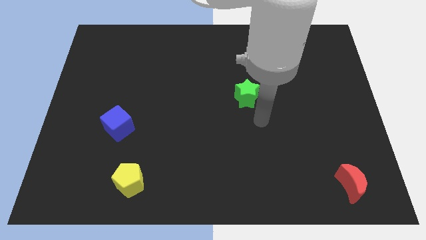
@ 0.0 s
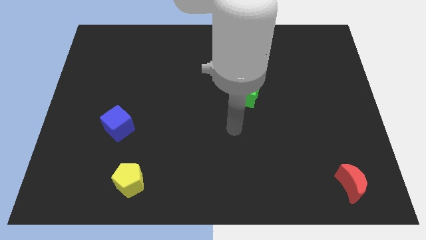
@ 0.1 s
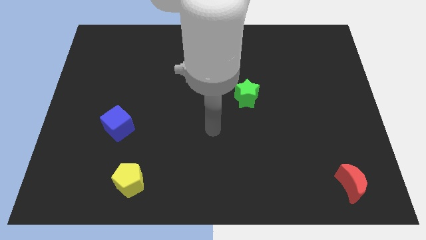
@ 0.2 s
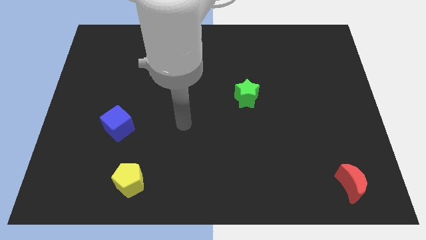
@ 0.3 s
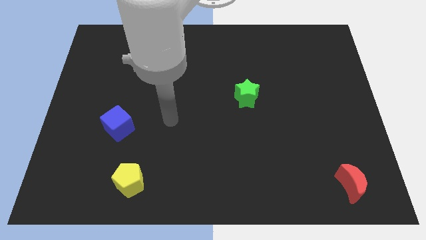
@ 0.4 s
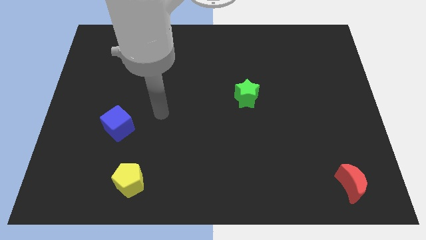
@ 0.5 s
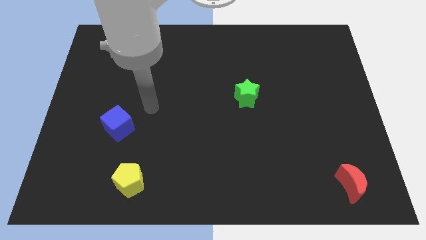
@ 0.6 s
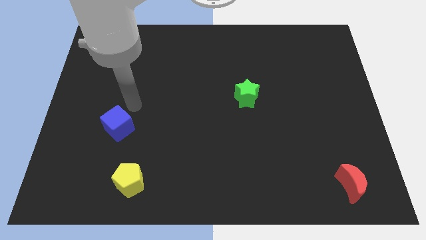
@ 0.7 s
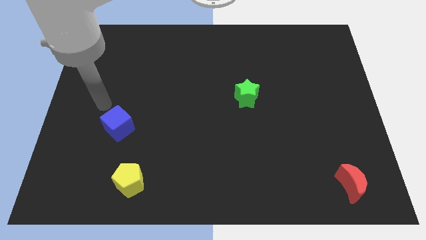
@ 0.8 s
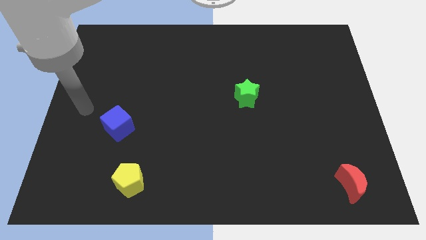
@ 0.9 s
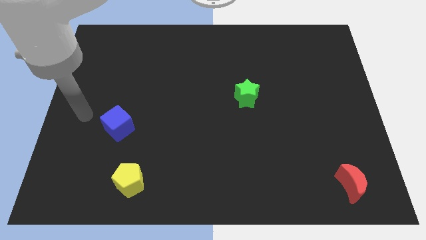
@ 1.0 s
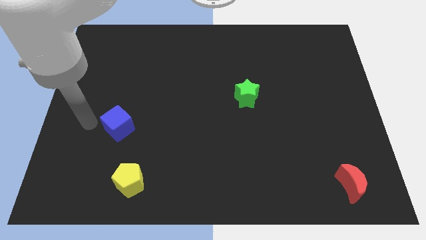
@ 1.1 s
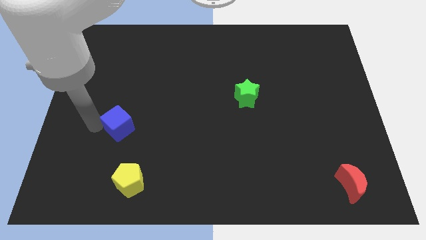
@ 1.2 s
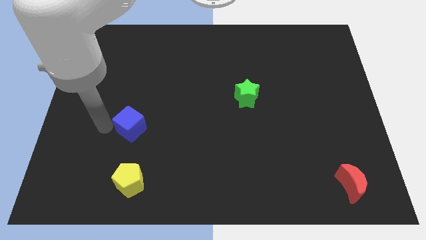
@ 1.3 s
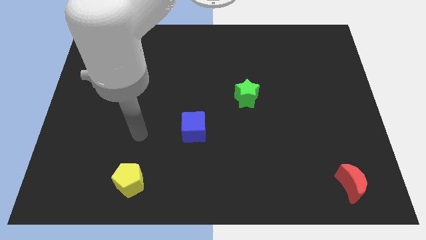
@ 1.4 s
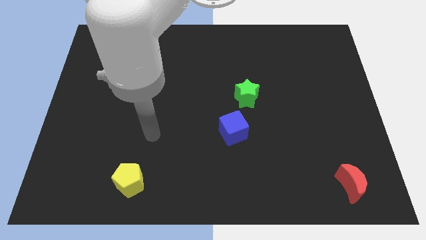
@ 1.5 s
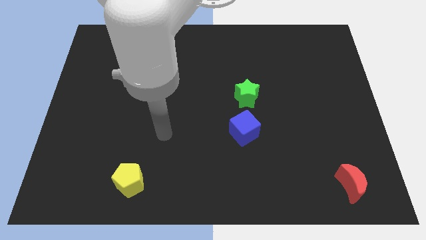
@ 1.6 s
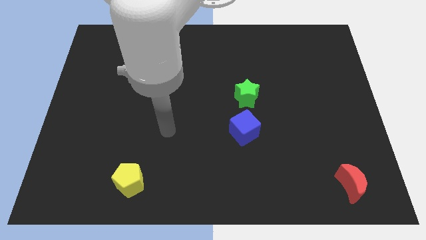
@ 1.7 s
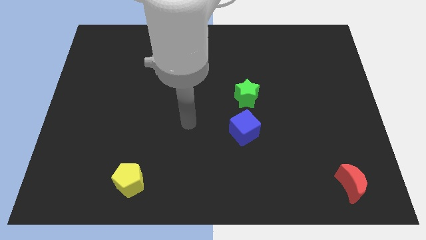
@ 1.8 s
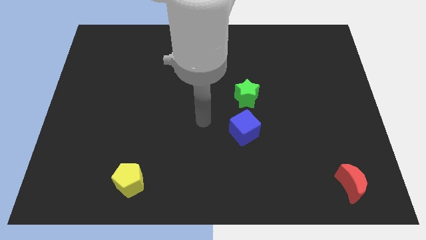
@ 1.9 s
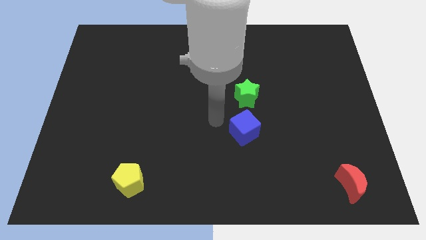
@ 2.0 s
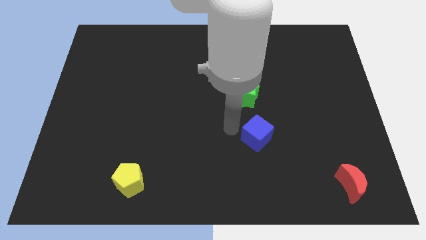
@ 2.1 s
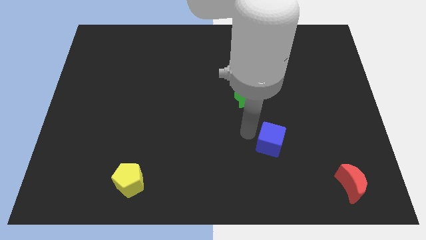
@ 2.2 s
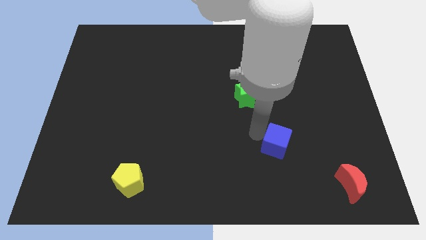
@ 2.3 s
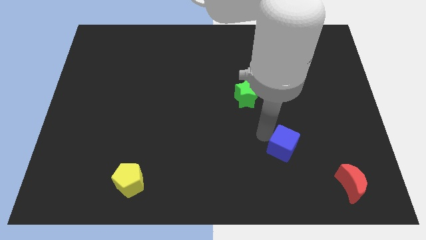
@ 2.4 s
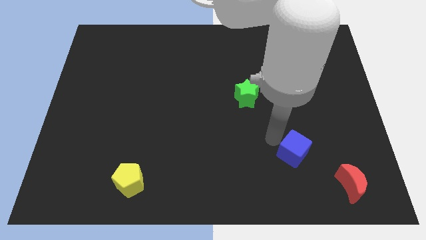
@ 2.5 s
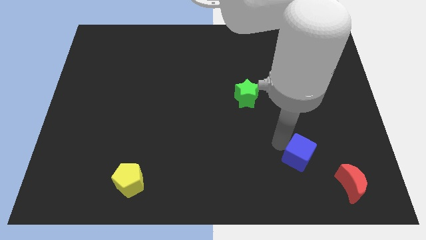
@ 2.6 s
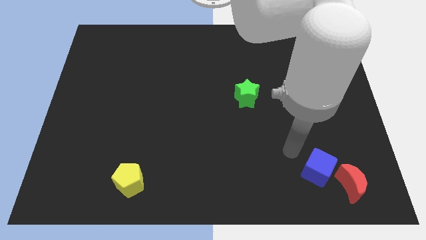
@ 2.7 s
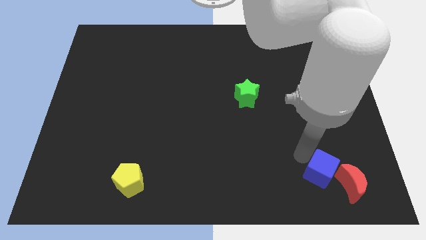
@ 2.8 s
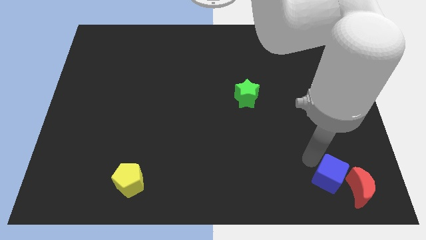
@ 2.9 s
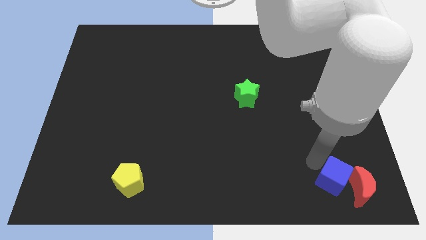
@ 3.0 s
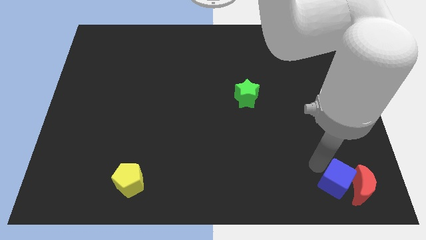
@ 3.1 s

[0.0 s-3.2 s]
slide the cube towards the red block

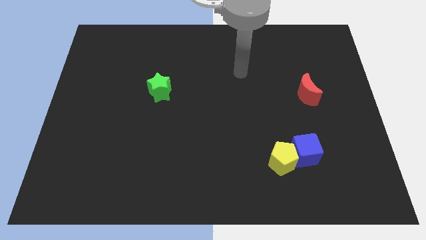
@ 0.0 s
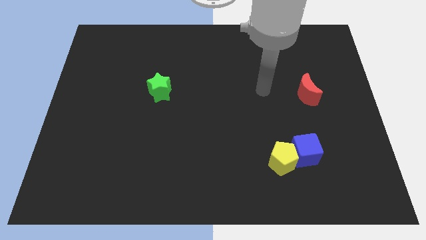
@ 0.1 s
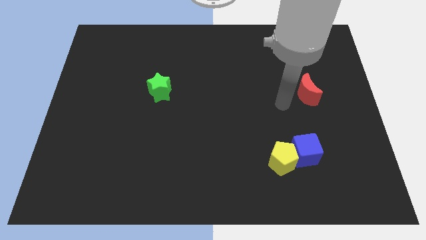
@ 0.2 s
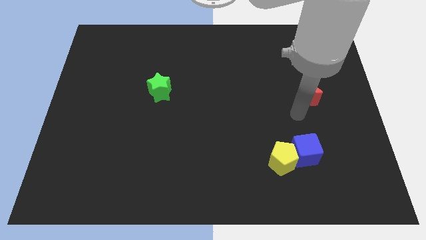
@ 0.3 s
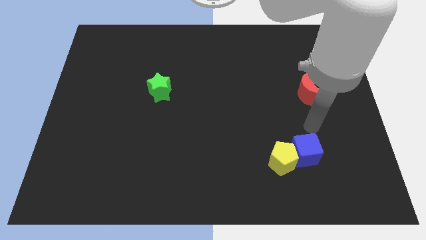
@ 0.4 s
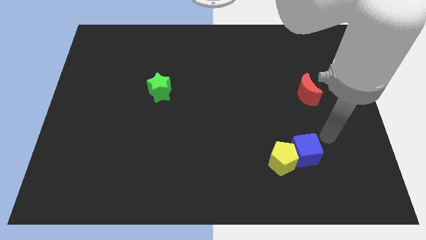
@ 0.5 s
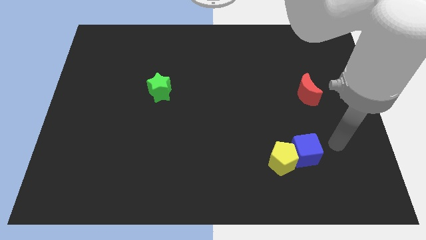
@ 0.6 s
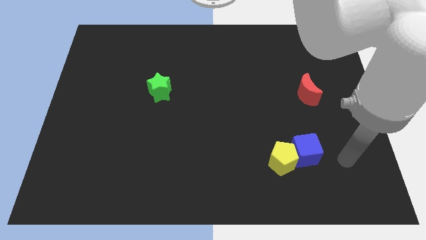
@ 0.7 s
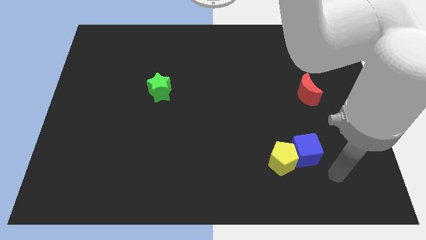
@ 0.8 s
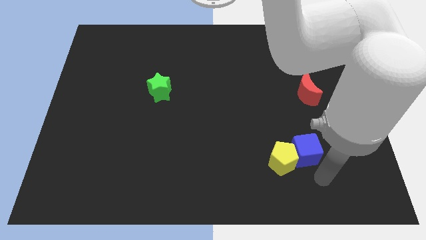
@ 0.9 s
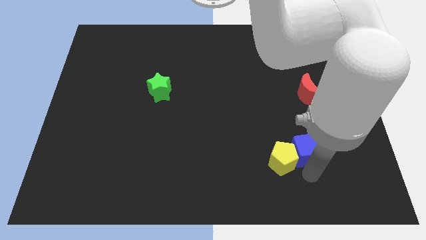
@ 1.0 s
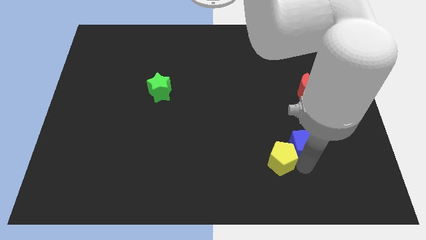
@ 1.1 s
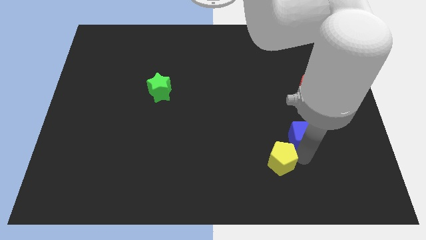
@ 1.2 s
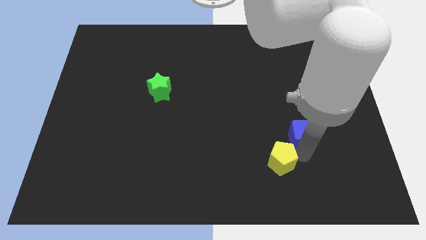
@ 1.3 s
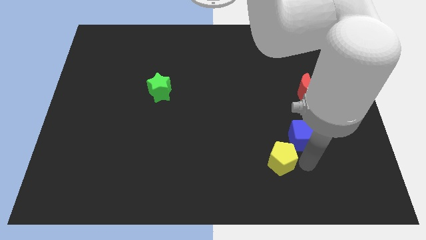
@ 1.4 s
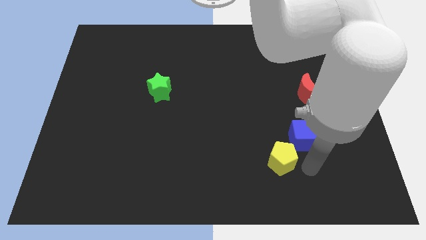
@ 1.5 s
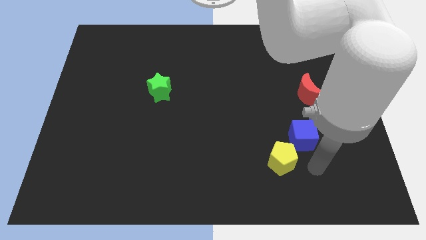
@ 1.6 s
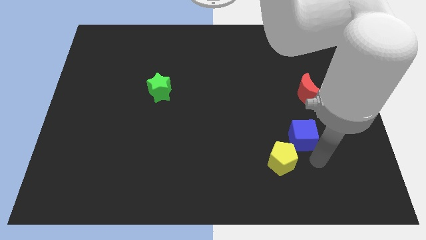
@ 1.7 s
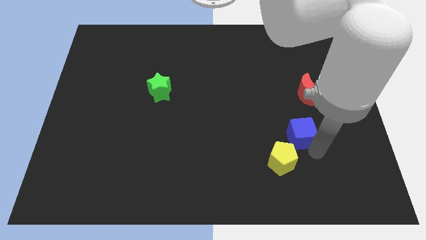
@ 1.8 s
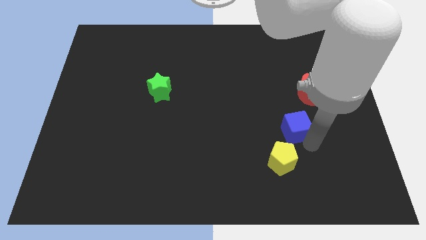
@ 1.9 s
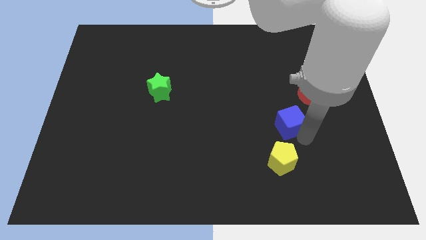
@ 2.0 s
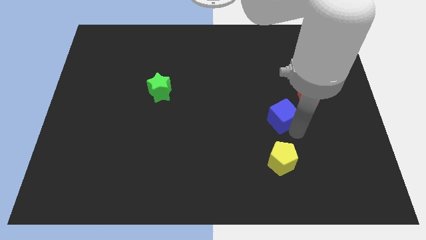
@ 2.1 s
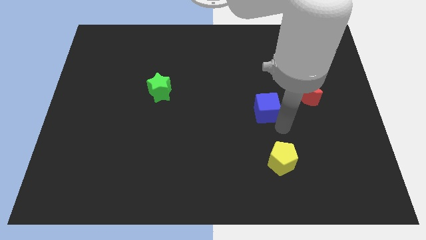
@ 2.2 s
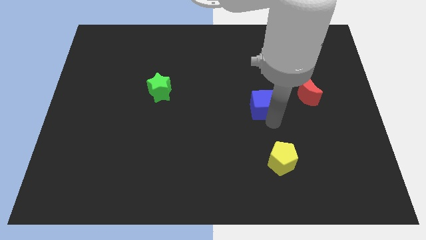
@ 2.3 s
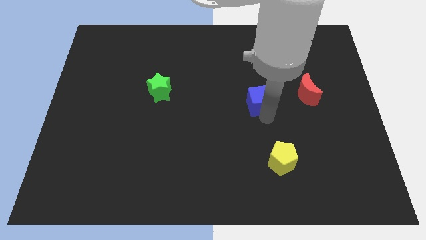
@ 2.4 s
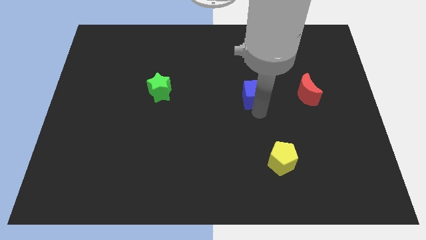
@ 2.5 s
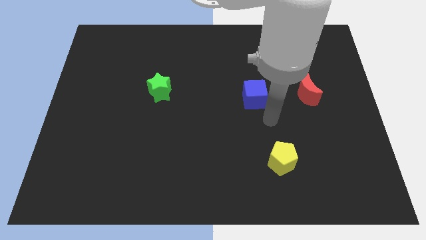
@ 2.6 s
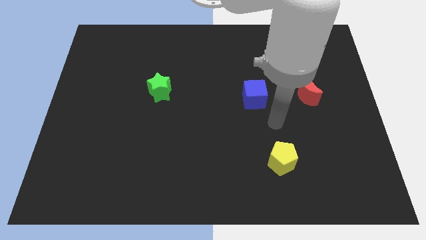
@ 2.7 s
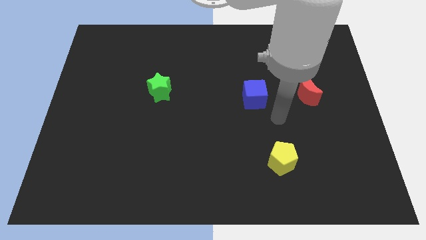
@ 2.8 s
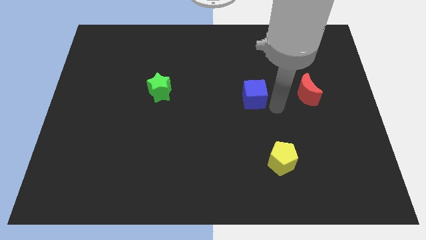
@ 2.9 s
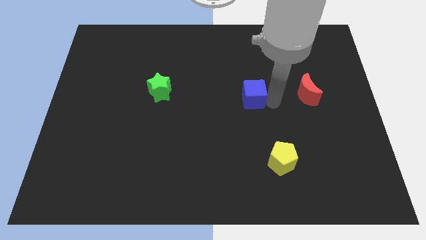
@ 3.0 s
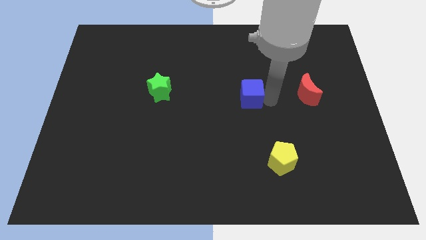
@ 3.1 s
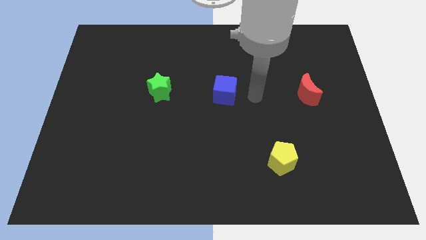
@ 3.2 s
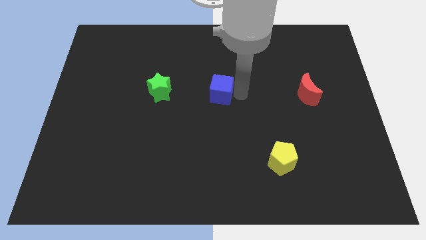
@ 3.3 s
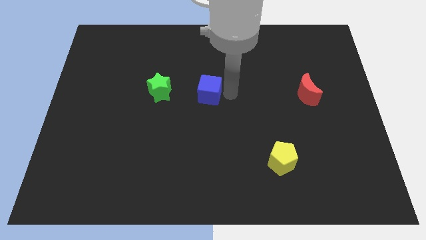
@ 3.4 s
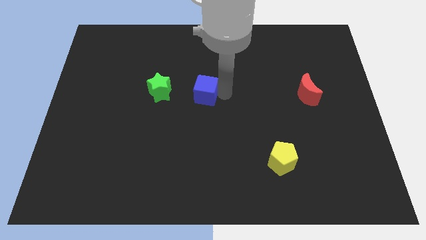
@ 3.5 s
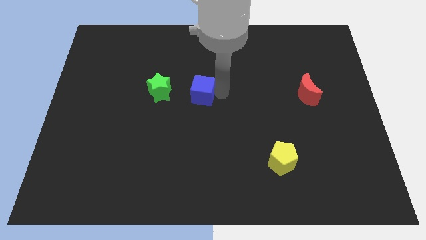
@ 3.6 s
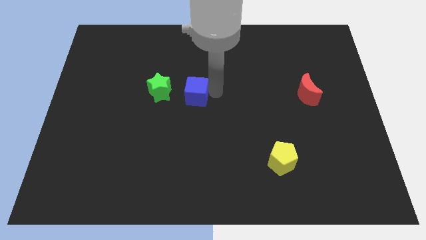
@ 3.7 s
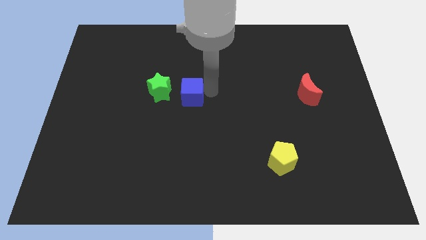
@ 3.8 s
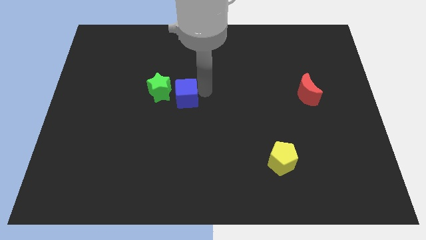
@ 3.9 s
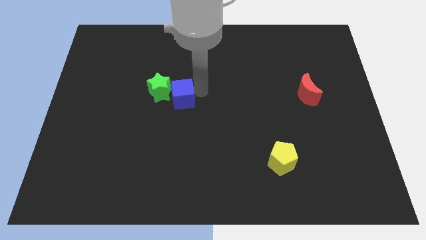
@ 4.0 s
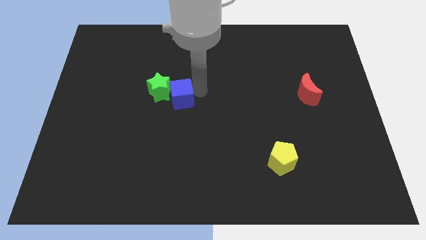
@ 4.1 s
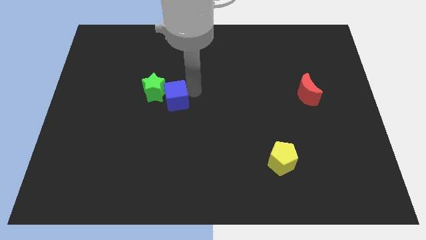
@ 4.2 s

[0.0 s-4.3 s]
slide the cube close to the green star

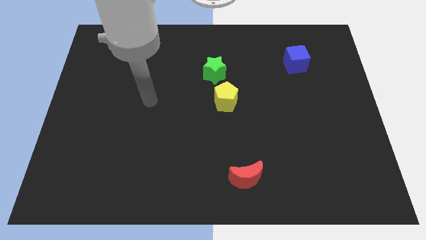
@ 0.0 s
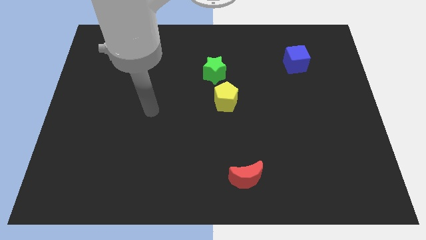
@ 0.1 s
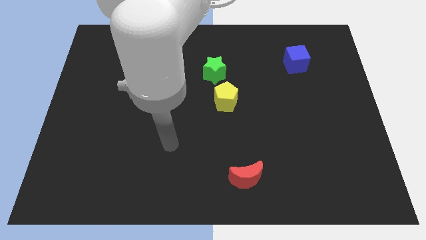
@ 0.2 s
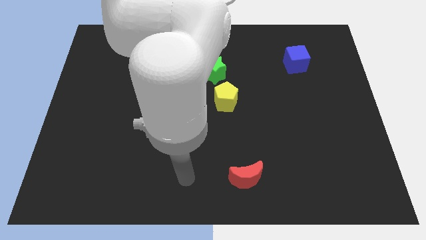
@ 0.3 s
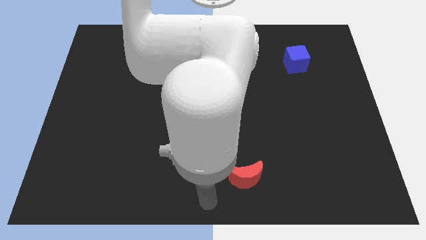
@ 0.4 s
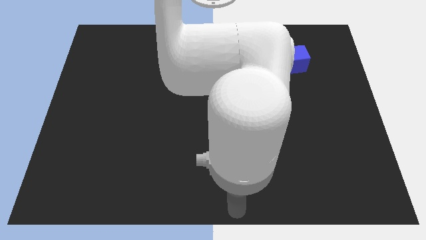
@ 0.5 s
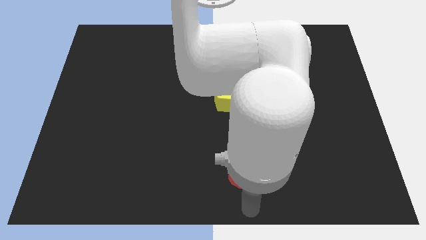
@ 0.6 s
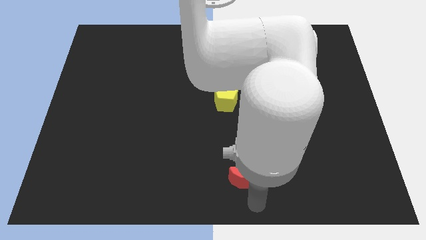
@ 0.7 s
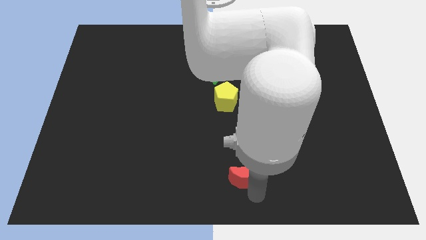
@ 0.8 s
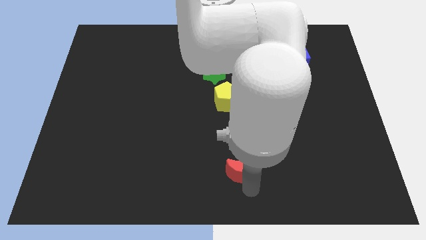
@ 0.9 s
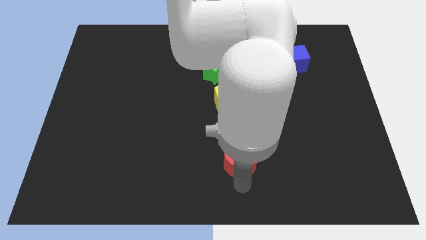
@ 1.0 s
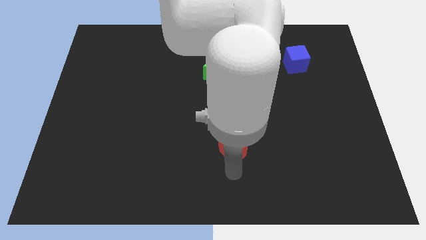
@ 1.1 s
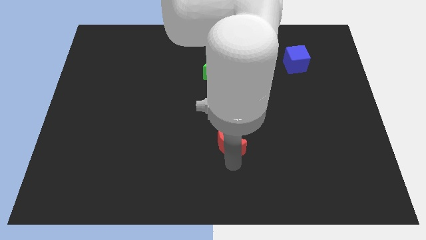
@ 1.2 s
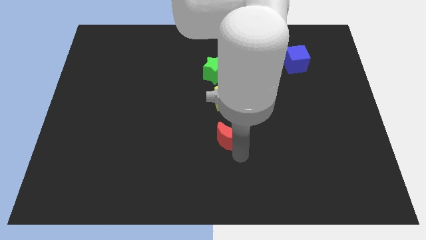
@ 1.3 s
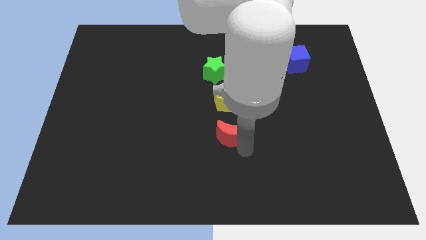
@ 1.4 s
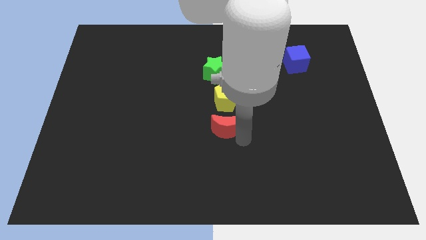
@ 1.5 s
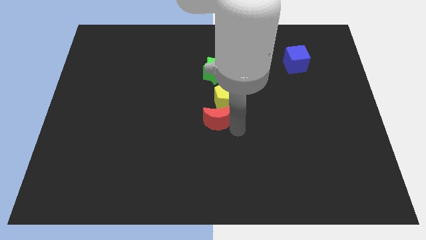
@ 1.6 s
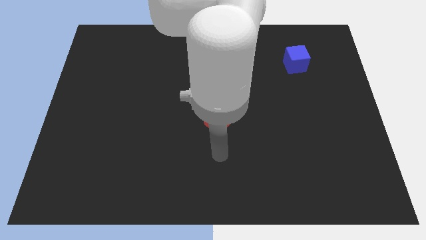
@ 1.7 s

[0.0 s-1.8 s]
move the moon next to the yellow block
